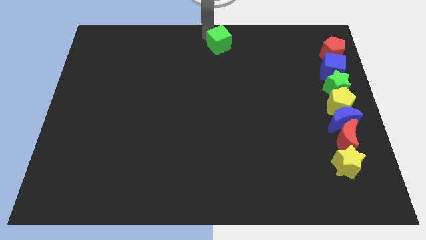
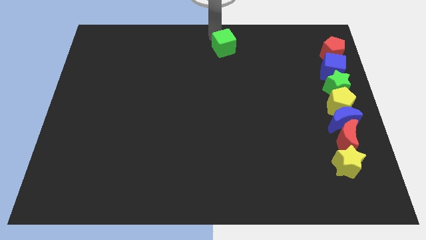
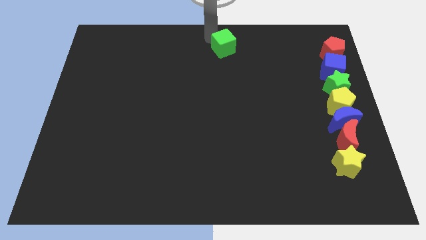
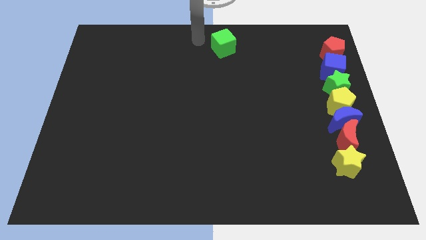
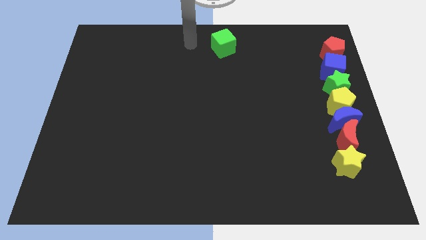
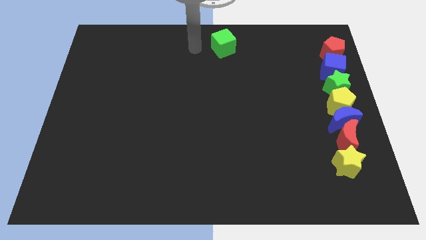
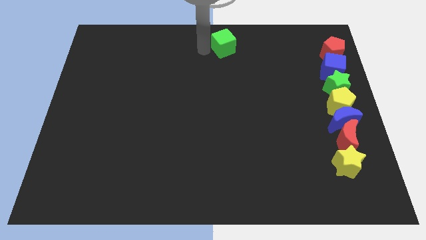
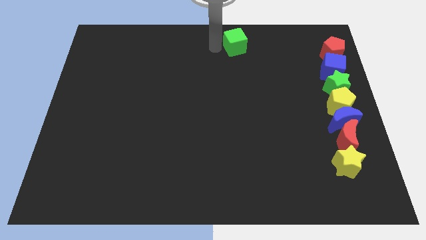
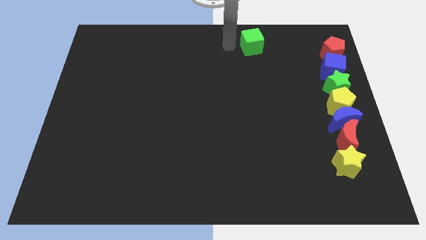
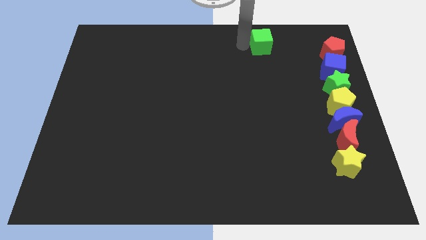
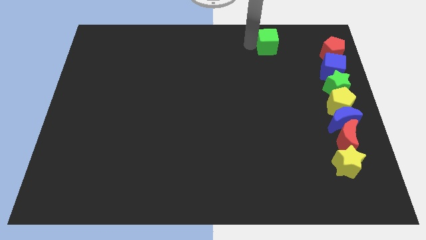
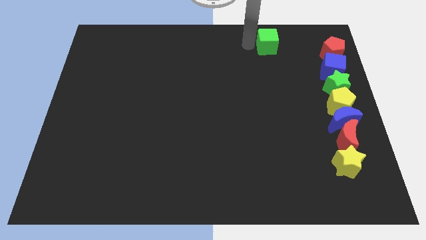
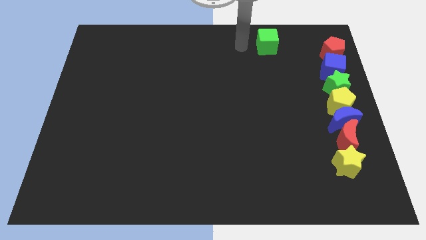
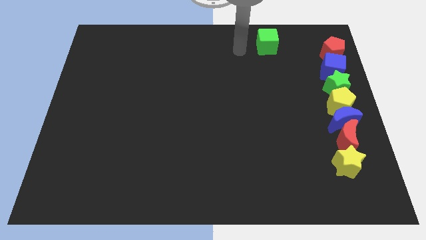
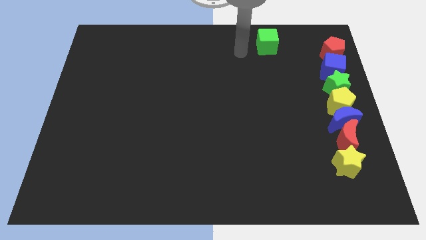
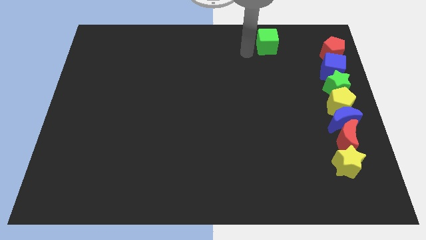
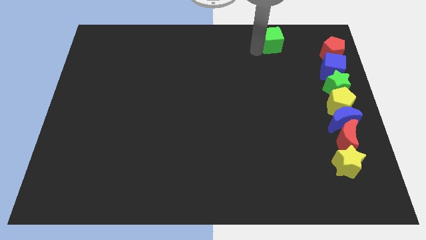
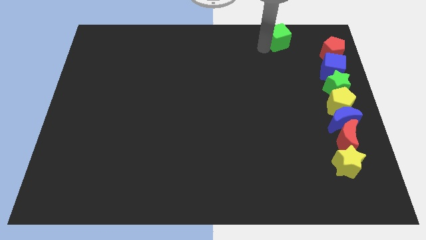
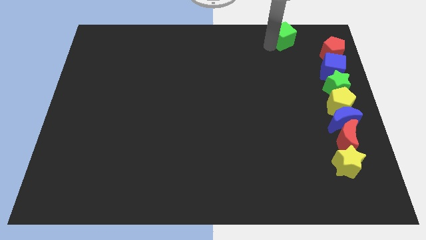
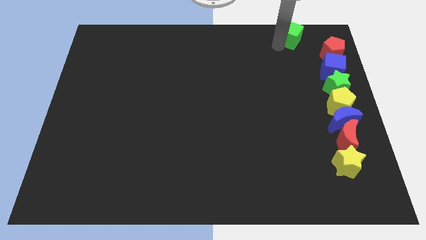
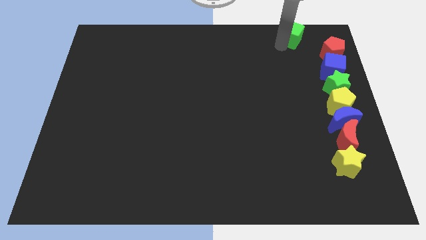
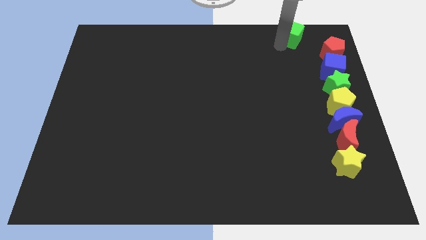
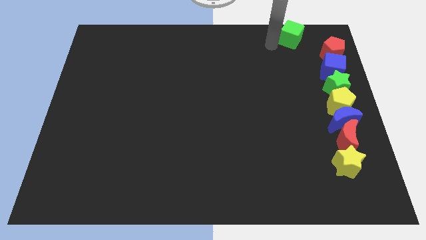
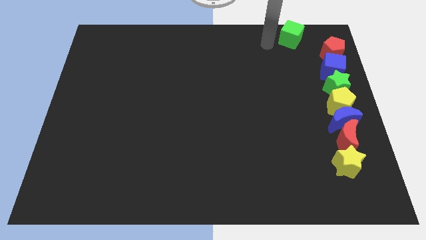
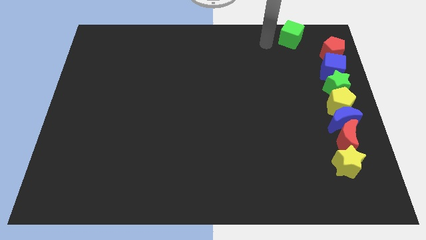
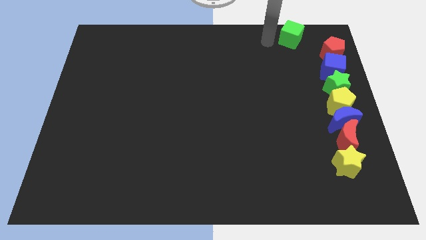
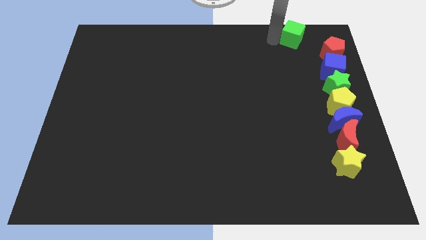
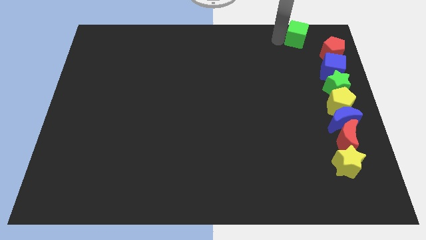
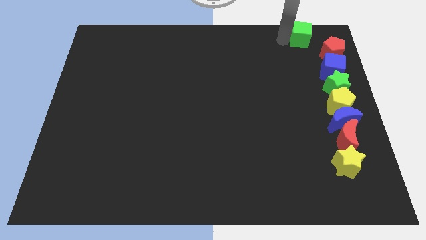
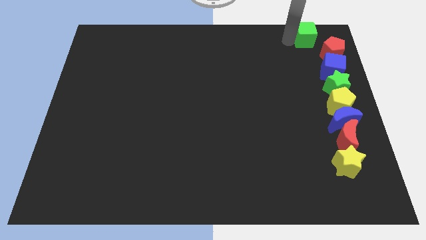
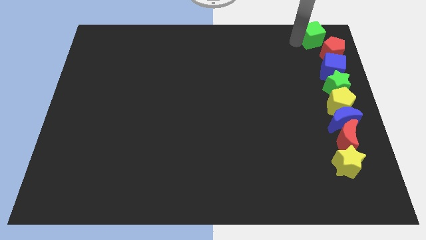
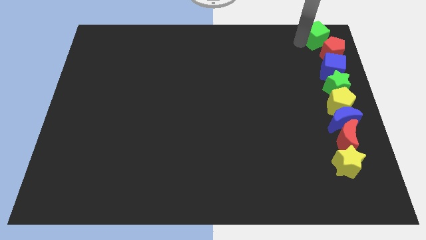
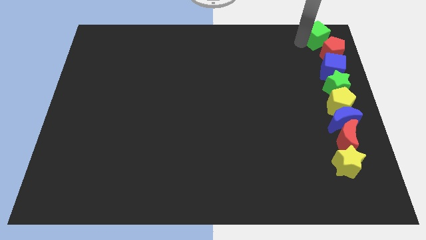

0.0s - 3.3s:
slide the green cube slightly to the right

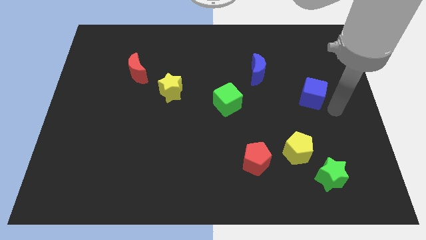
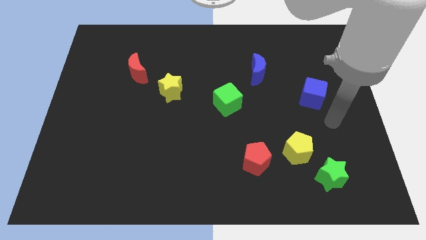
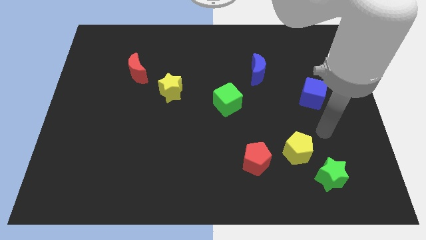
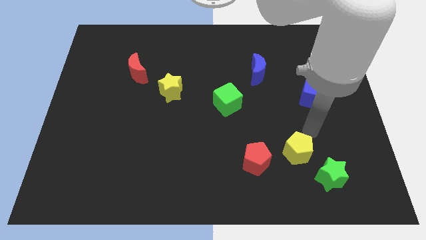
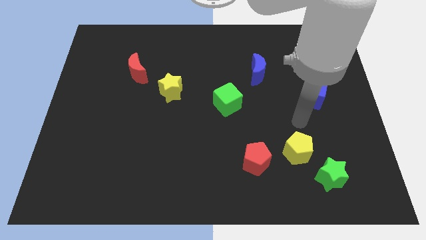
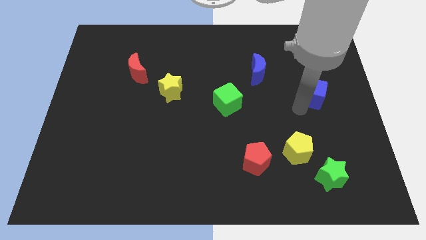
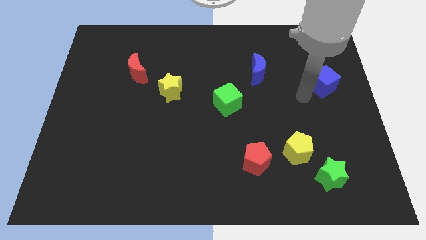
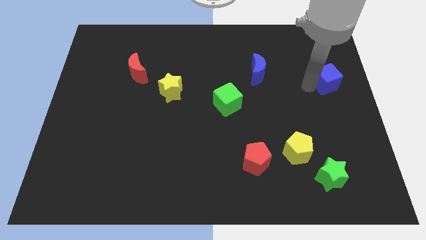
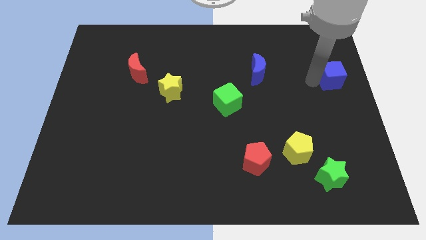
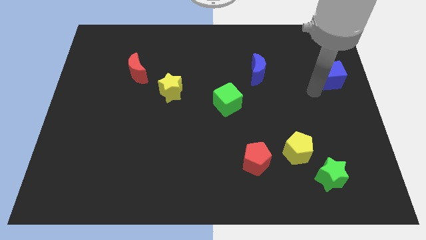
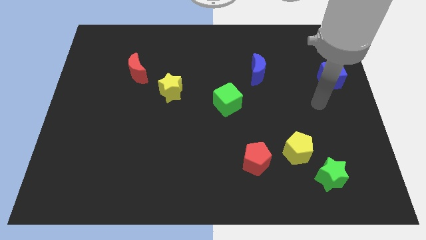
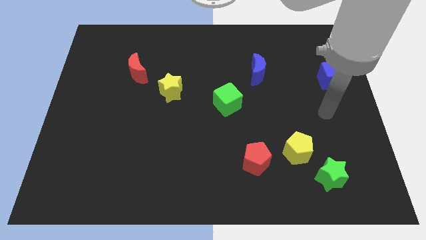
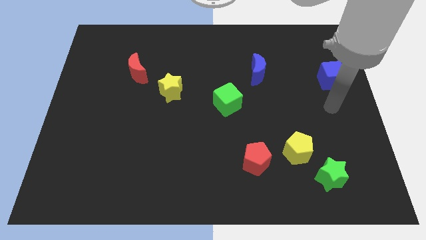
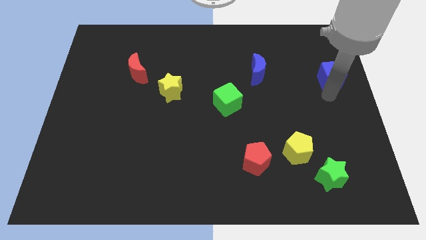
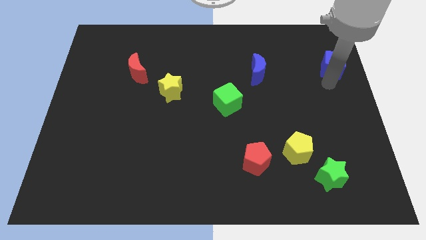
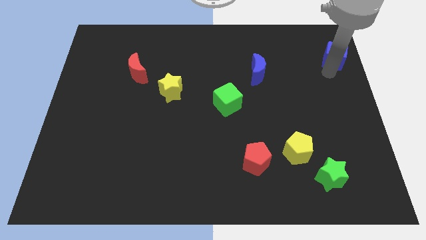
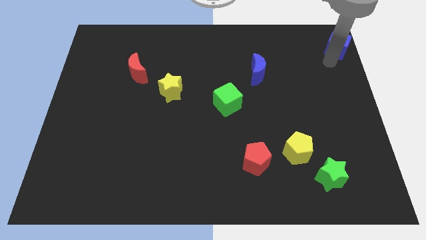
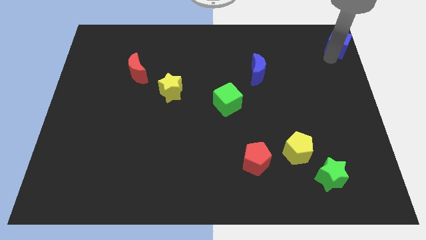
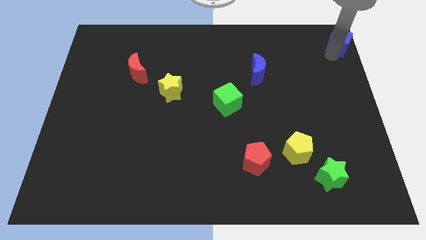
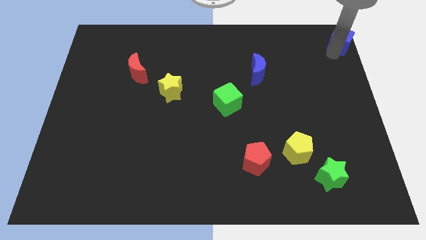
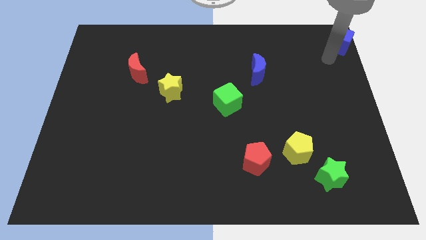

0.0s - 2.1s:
push the blue cube towards the top right of the board

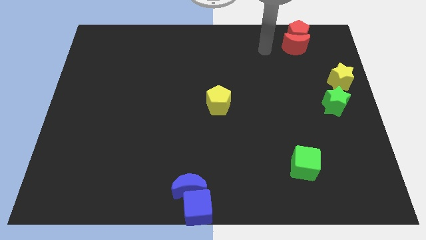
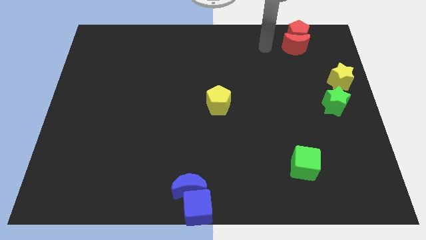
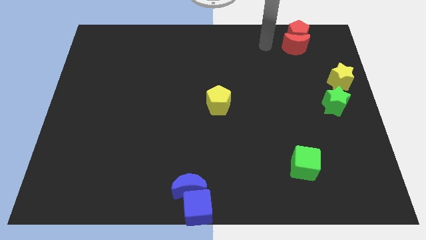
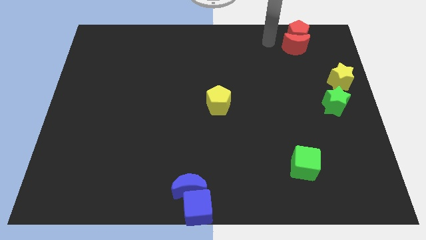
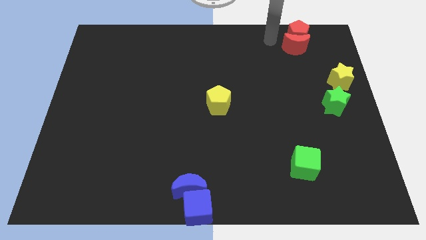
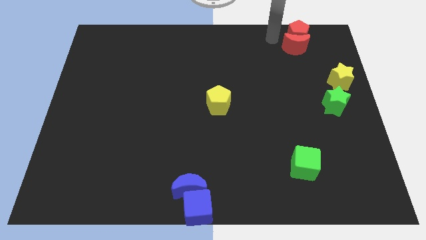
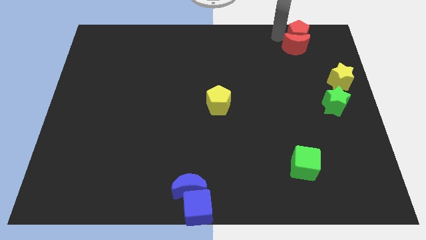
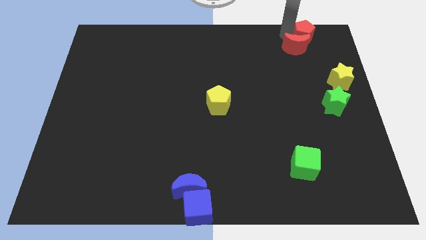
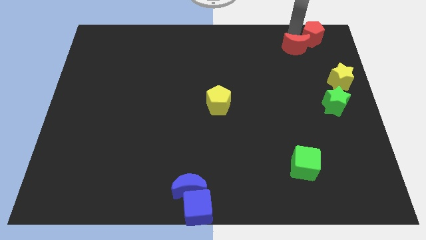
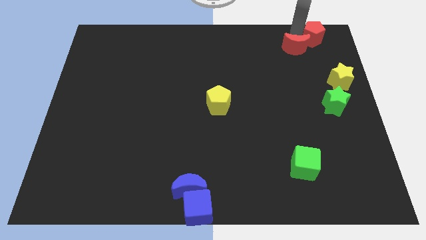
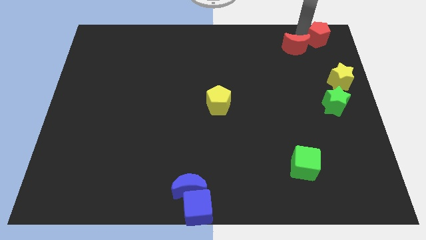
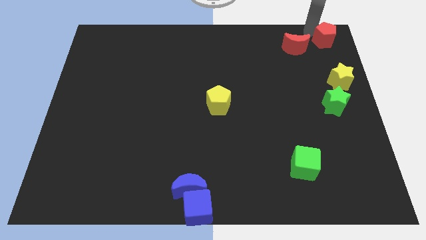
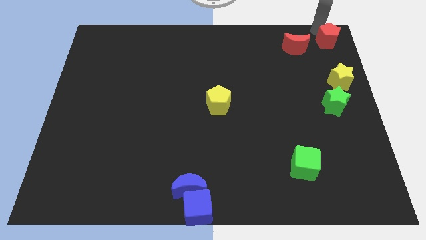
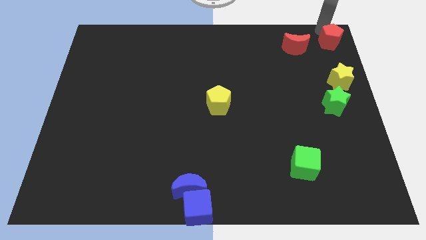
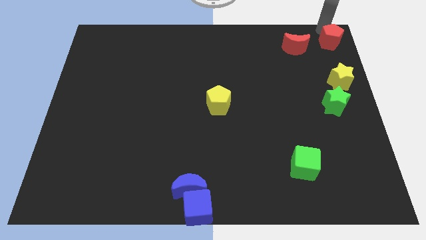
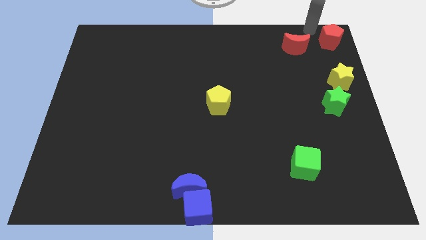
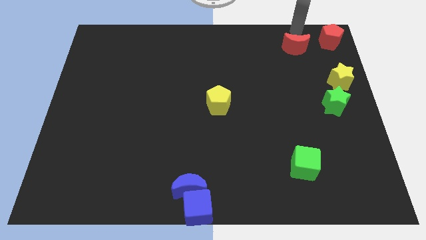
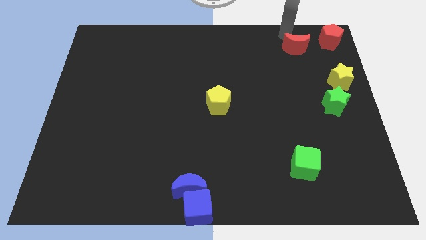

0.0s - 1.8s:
separate the red pentagon from the red crescent

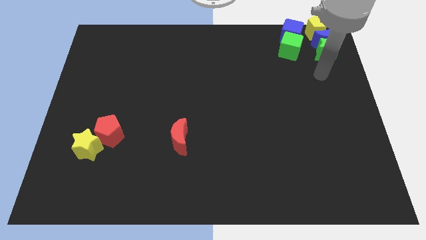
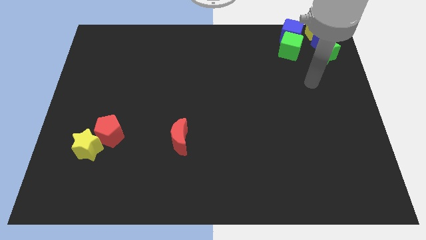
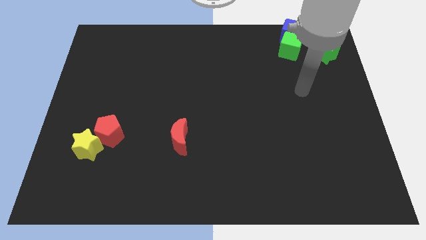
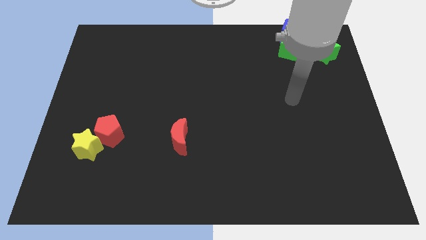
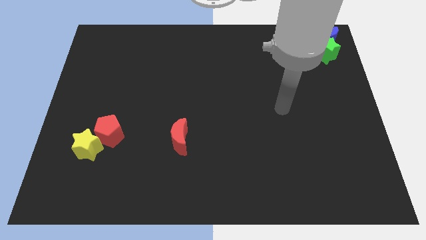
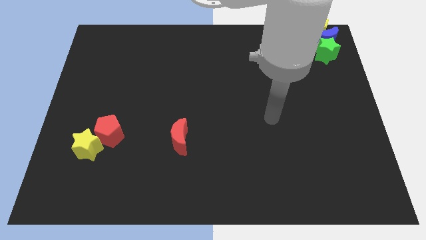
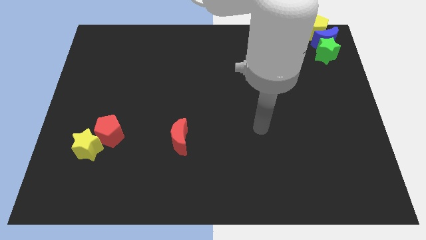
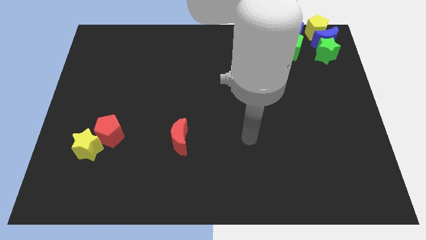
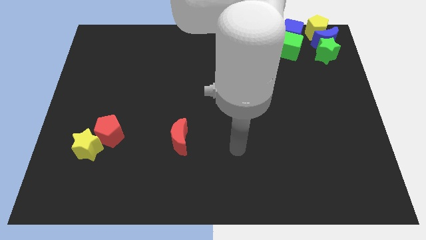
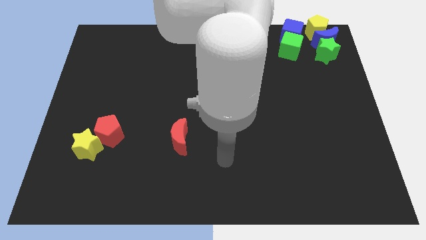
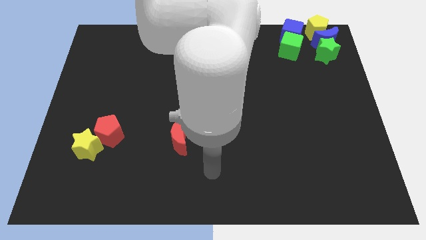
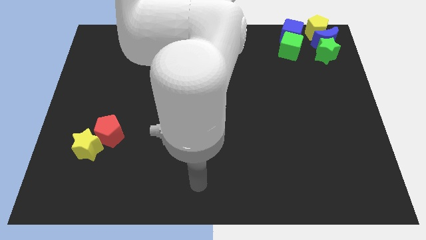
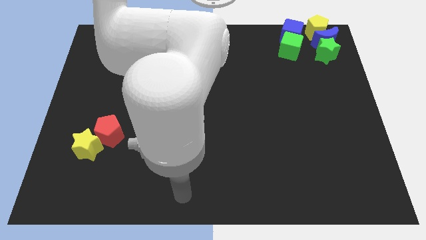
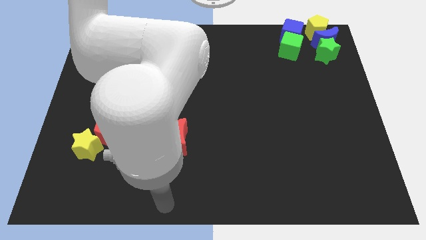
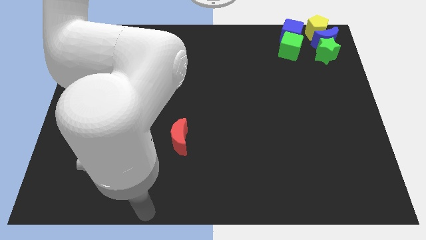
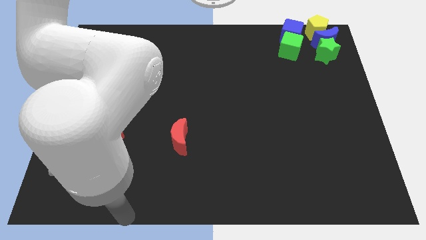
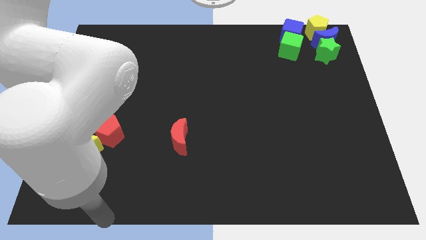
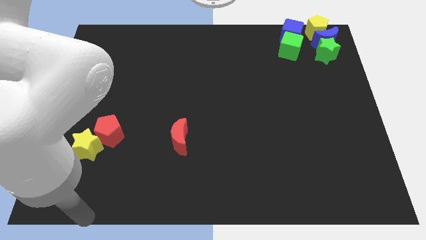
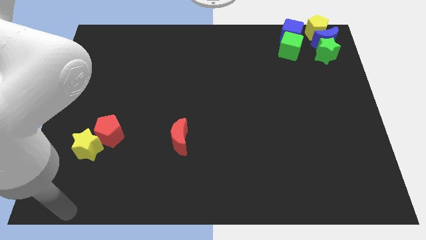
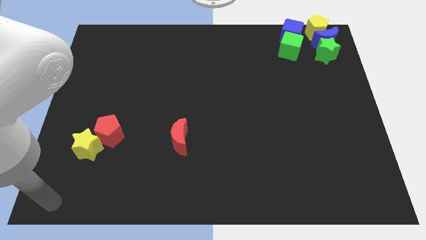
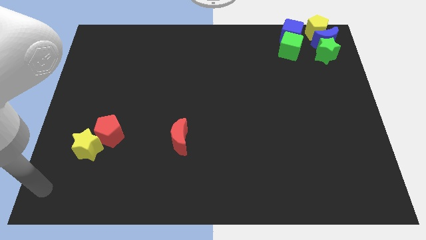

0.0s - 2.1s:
move your arm to the bottom left of the board
